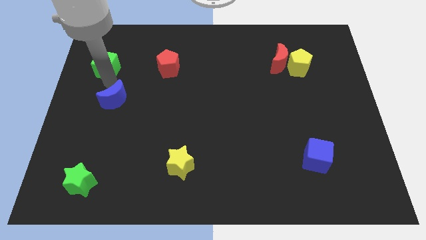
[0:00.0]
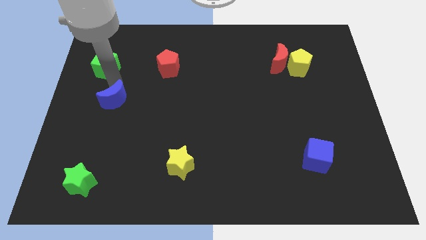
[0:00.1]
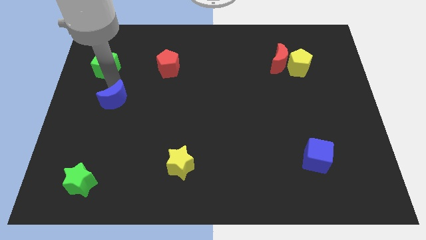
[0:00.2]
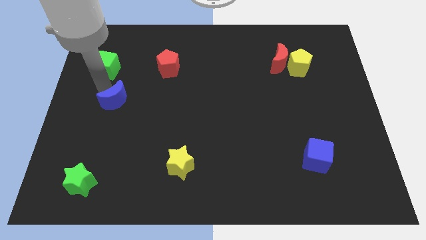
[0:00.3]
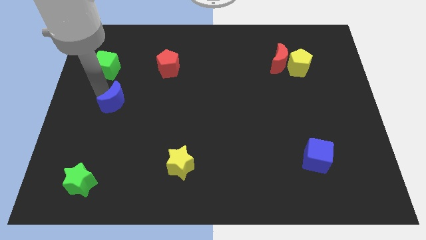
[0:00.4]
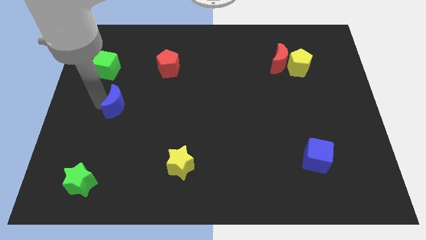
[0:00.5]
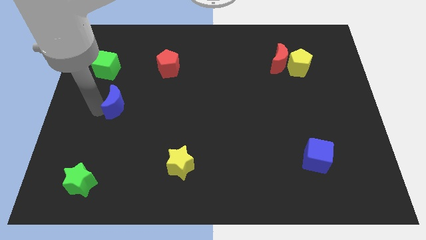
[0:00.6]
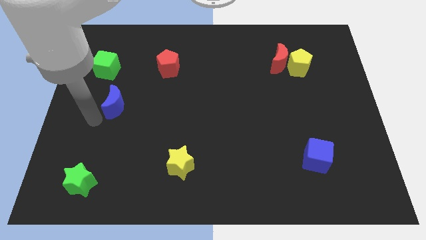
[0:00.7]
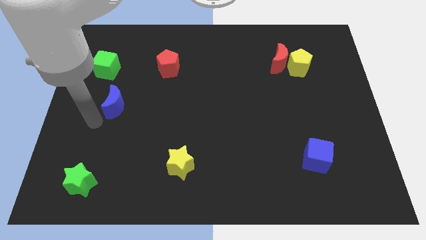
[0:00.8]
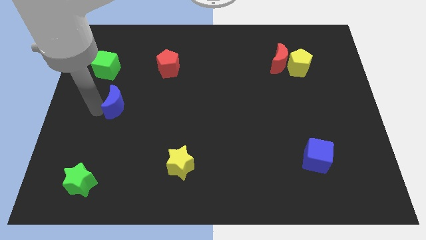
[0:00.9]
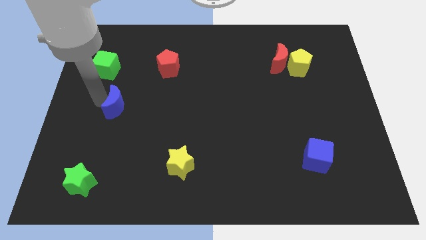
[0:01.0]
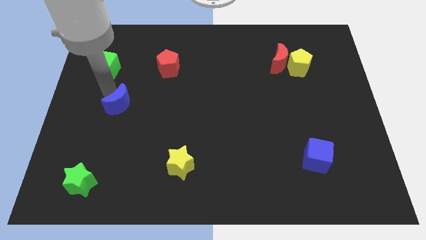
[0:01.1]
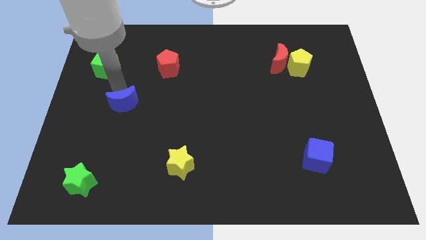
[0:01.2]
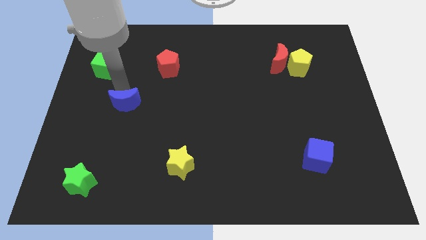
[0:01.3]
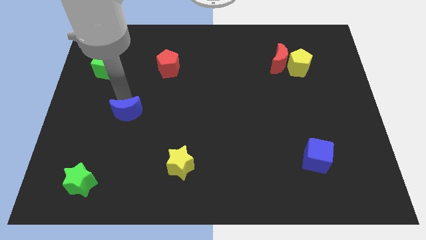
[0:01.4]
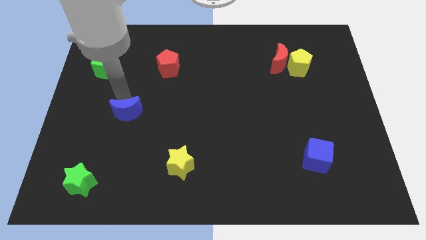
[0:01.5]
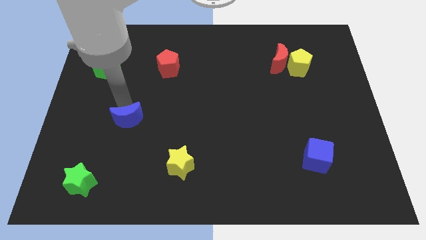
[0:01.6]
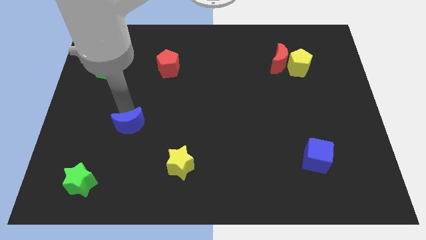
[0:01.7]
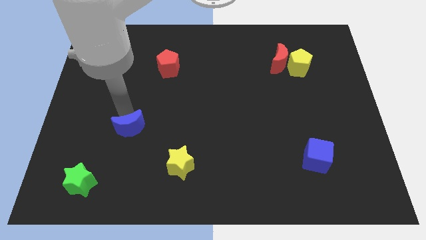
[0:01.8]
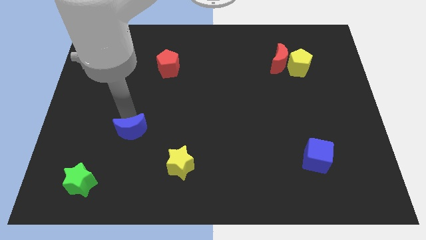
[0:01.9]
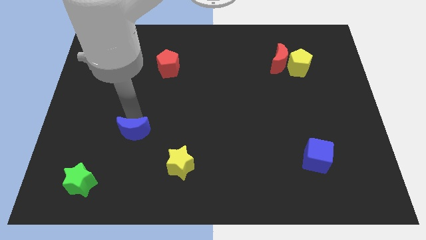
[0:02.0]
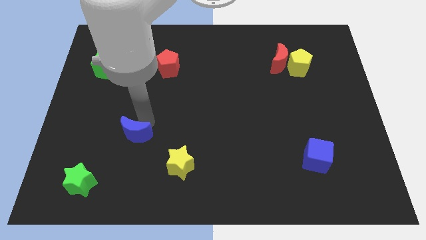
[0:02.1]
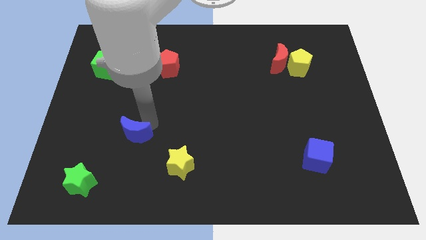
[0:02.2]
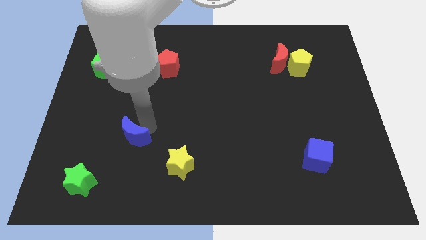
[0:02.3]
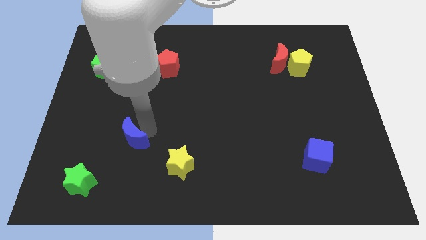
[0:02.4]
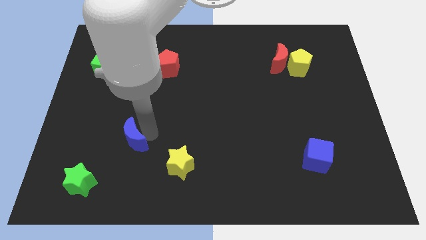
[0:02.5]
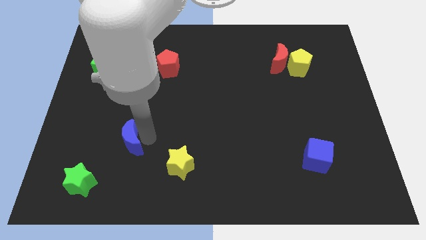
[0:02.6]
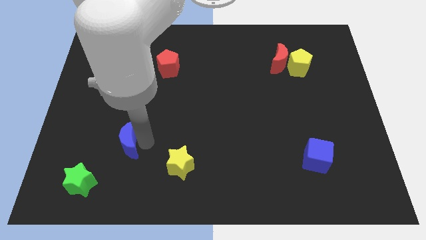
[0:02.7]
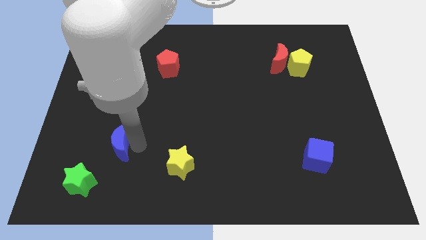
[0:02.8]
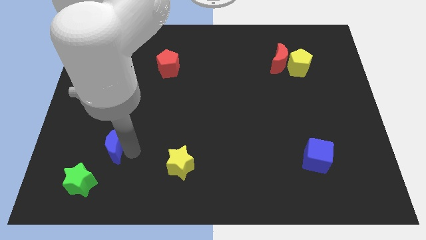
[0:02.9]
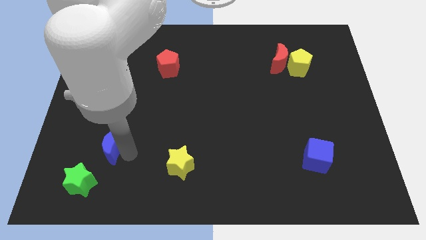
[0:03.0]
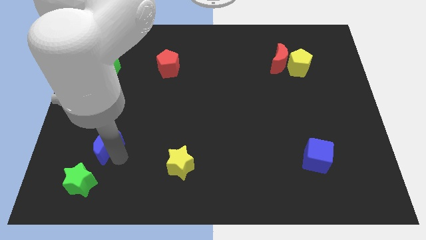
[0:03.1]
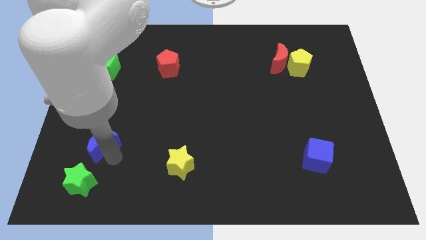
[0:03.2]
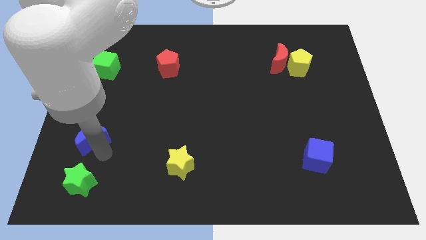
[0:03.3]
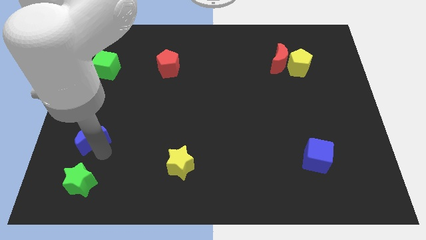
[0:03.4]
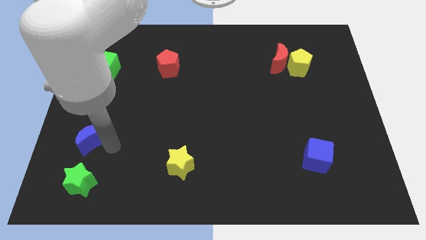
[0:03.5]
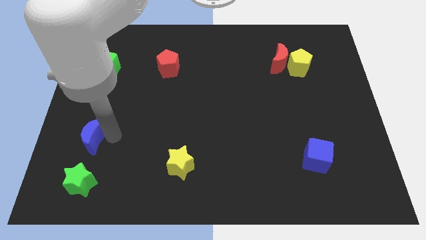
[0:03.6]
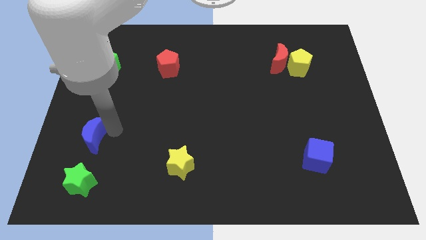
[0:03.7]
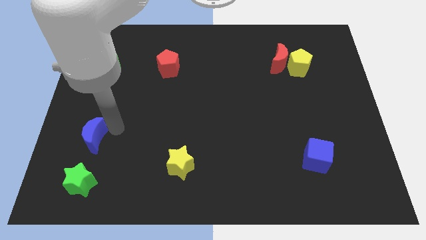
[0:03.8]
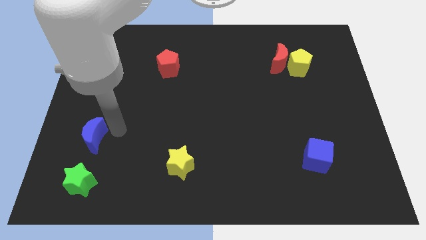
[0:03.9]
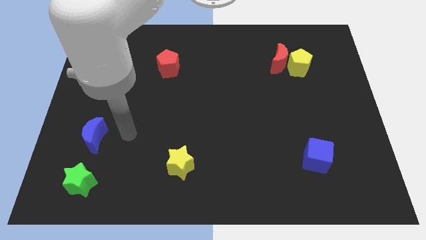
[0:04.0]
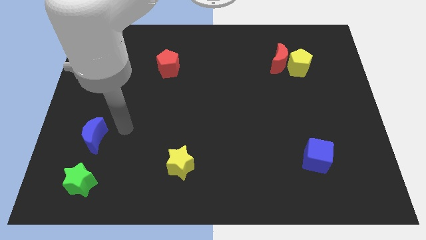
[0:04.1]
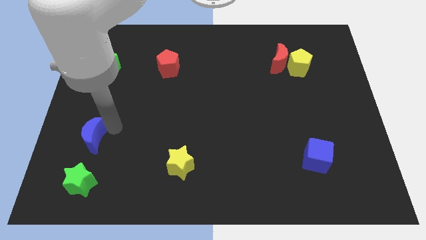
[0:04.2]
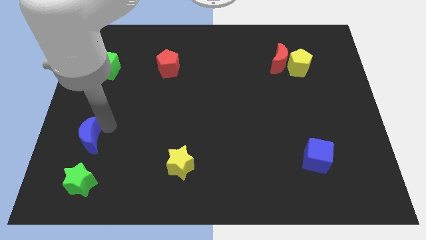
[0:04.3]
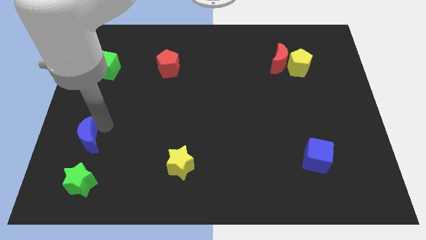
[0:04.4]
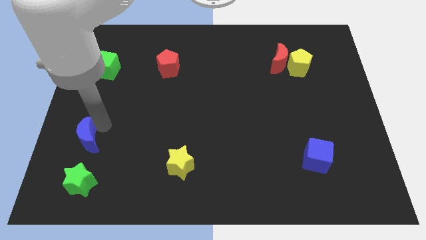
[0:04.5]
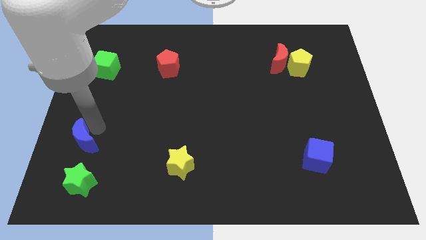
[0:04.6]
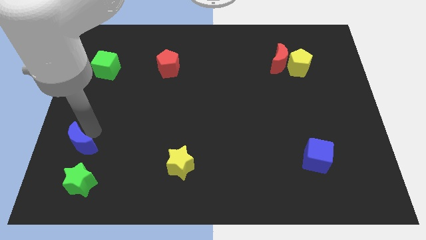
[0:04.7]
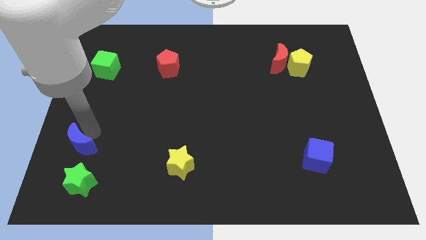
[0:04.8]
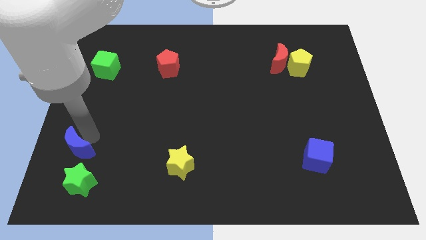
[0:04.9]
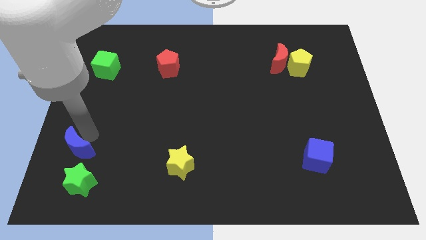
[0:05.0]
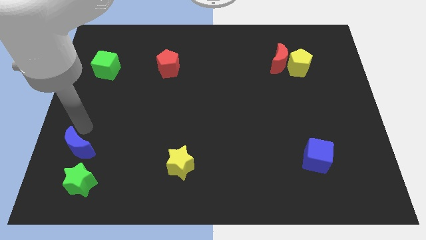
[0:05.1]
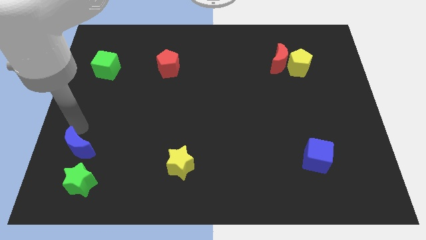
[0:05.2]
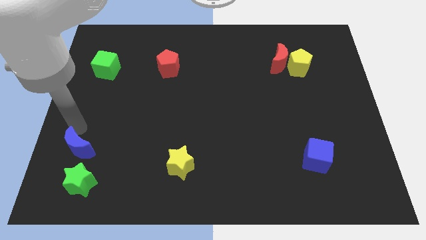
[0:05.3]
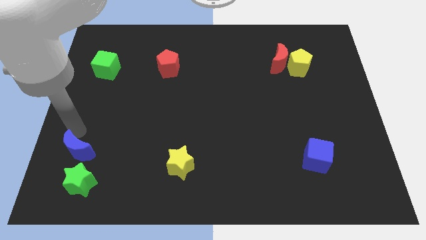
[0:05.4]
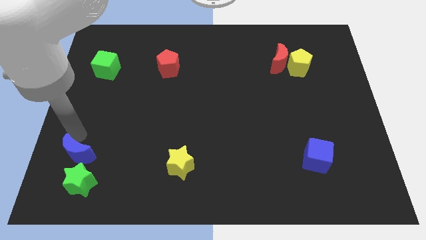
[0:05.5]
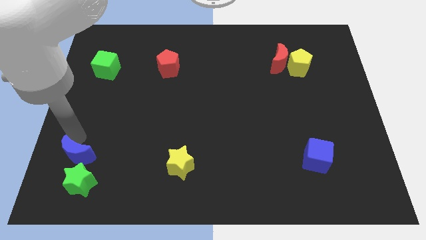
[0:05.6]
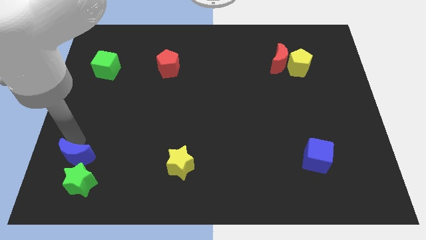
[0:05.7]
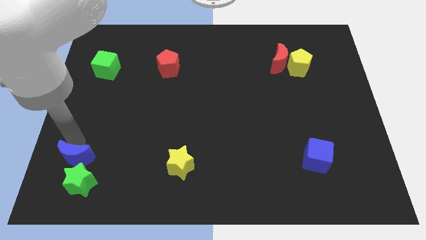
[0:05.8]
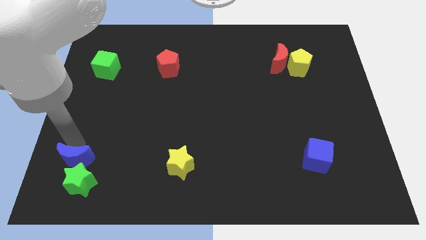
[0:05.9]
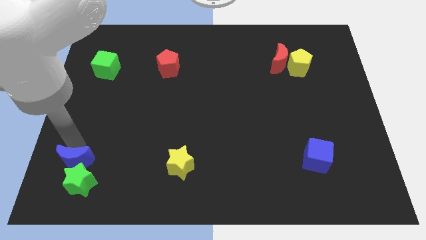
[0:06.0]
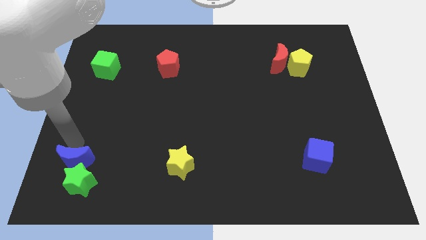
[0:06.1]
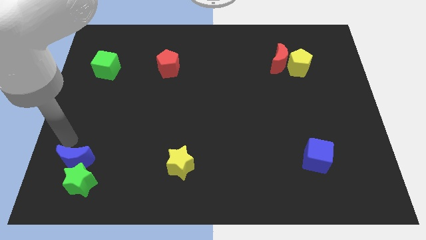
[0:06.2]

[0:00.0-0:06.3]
place the blue moon above the green star

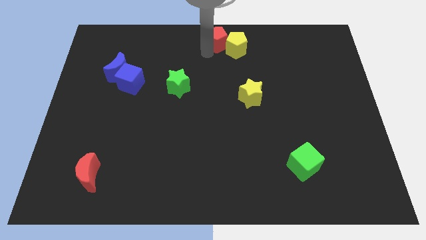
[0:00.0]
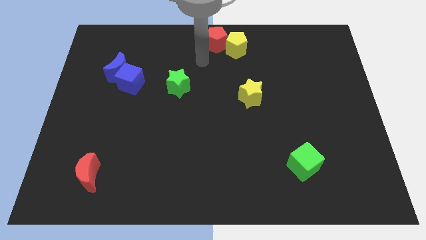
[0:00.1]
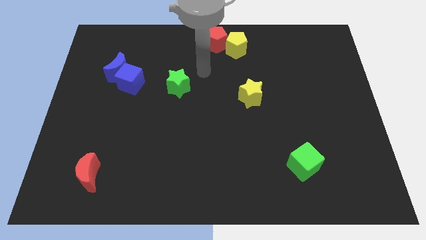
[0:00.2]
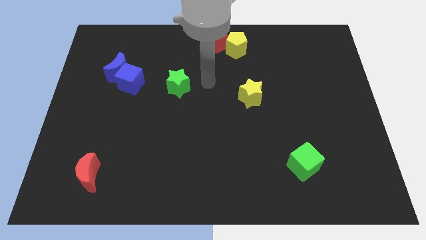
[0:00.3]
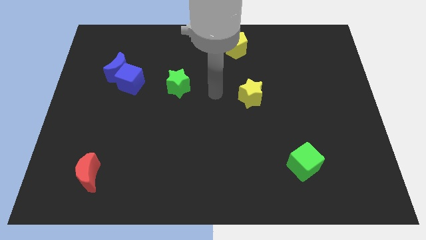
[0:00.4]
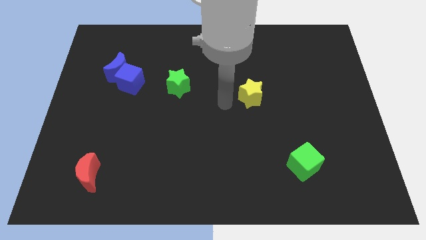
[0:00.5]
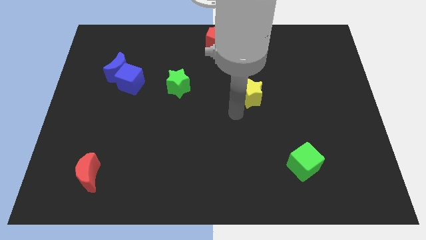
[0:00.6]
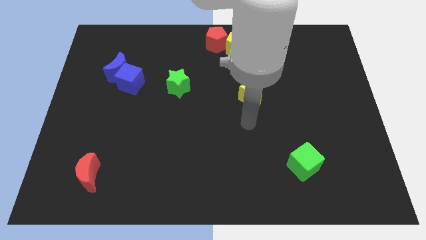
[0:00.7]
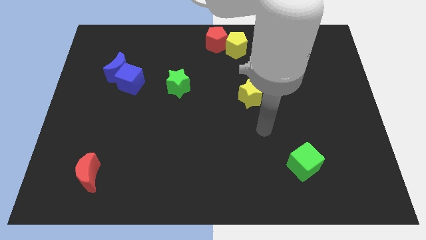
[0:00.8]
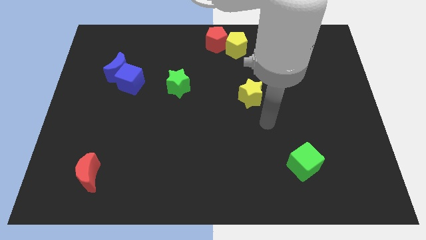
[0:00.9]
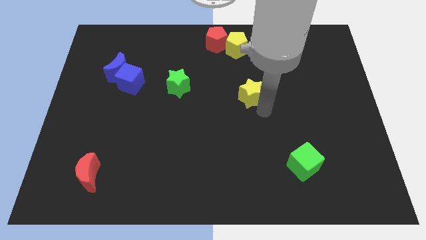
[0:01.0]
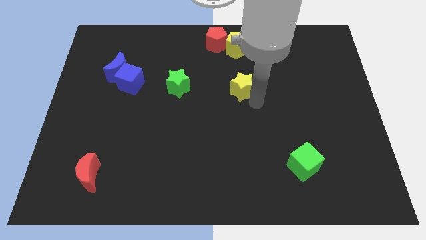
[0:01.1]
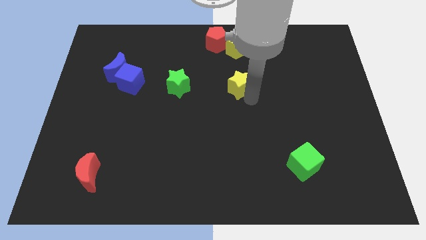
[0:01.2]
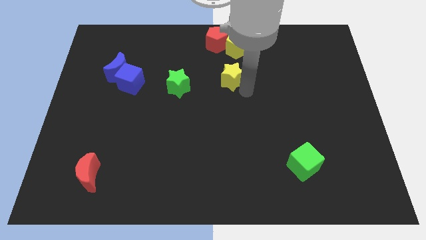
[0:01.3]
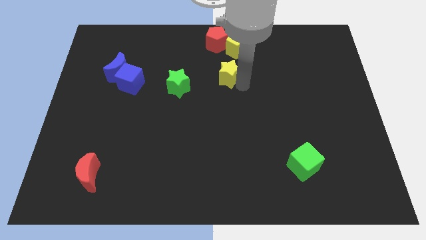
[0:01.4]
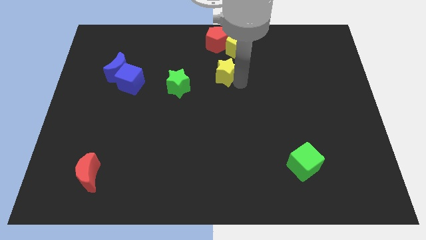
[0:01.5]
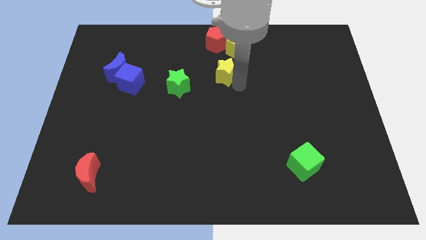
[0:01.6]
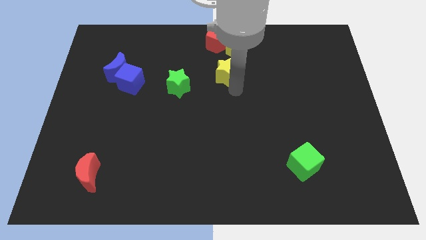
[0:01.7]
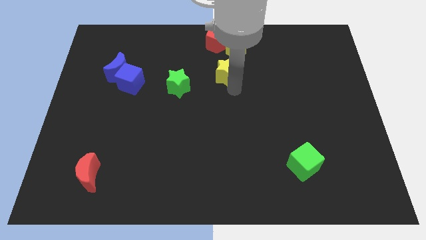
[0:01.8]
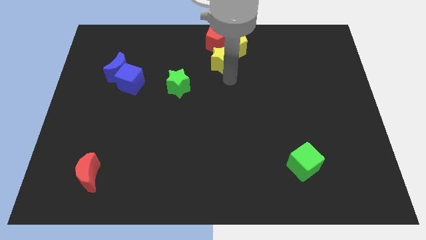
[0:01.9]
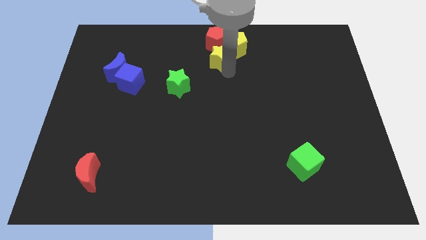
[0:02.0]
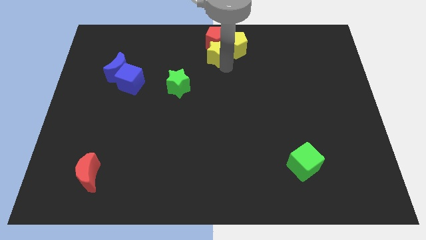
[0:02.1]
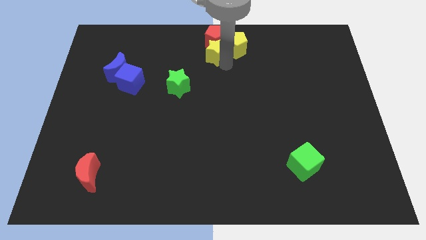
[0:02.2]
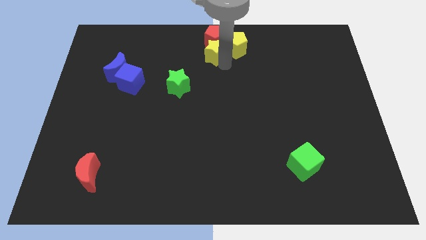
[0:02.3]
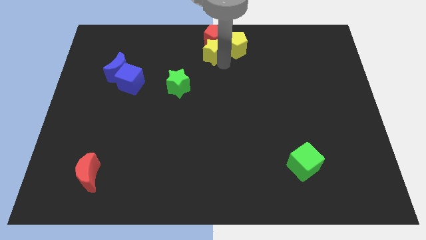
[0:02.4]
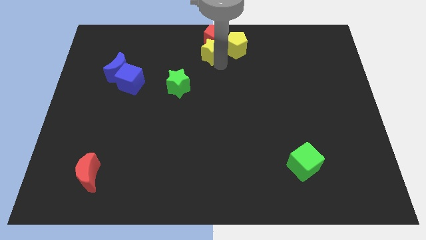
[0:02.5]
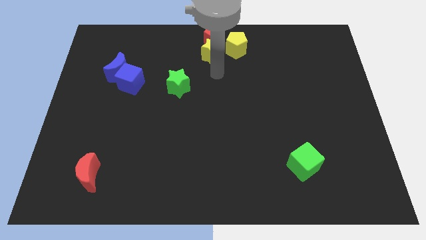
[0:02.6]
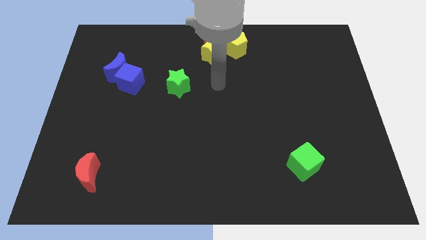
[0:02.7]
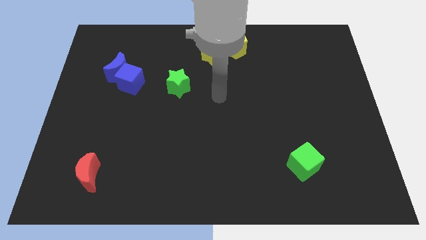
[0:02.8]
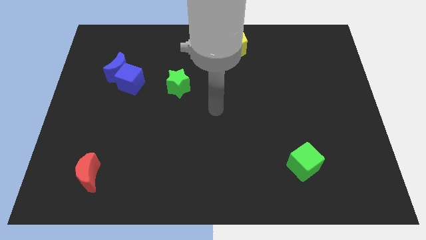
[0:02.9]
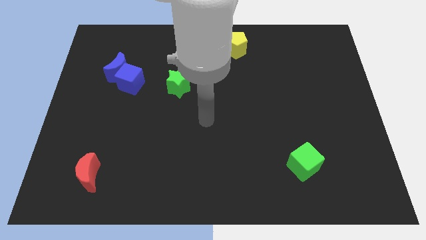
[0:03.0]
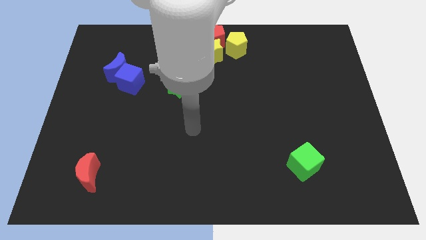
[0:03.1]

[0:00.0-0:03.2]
push the yellow star into the red pentagon
